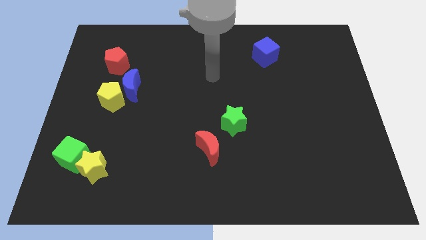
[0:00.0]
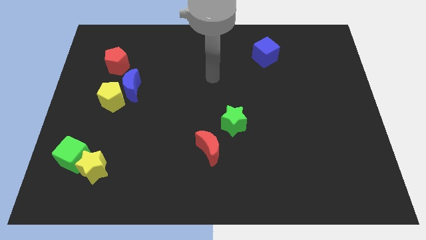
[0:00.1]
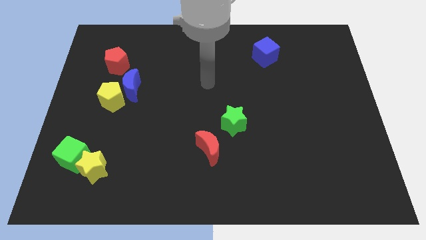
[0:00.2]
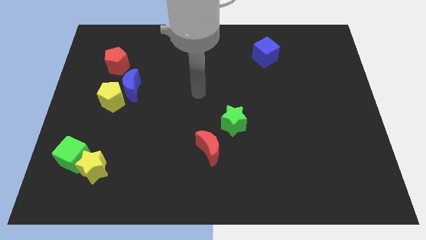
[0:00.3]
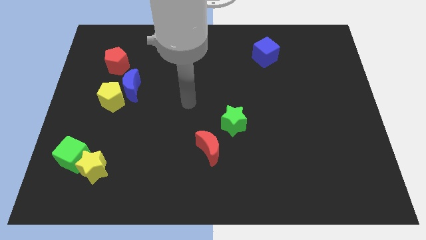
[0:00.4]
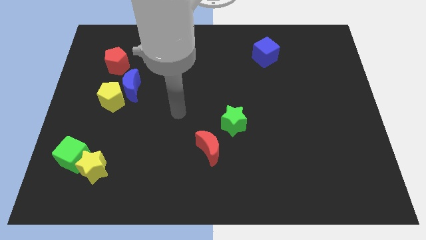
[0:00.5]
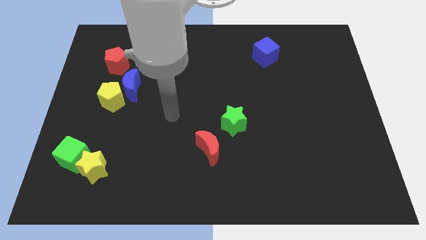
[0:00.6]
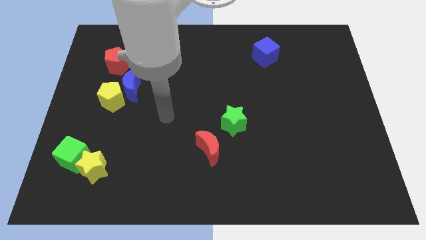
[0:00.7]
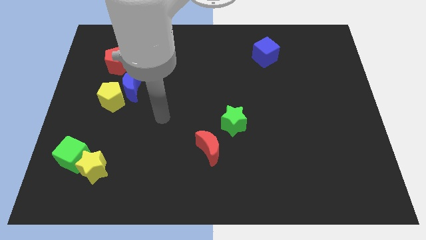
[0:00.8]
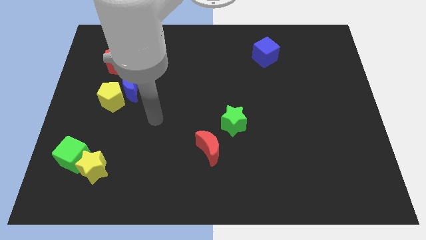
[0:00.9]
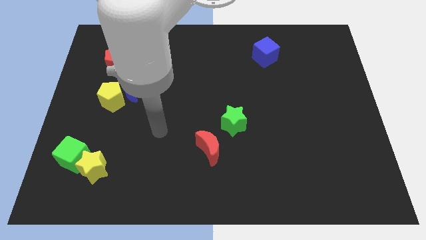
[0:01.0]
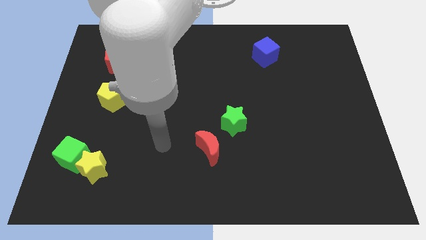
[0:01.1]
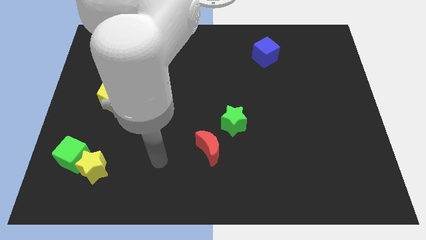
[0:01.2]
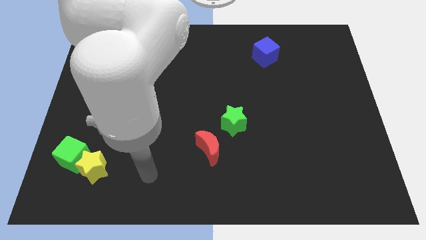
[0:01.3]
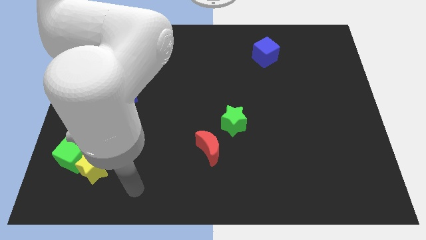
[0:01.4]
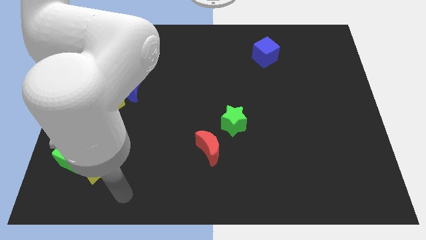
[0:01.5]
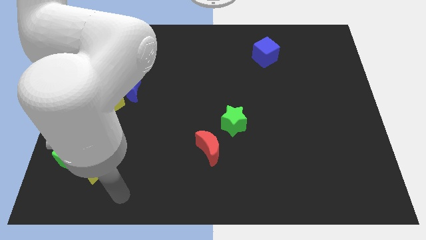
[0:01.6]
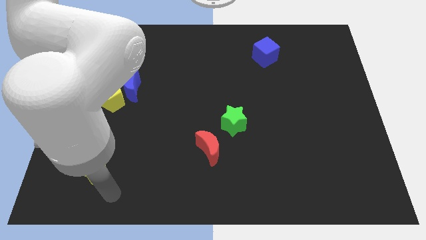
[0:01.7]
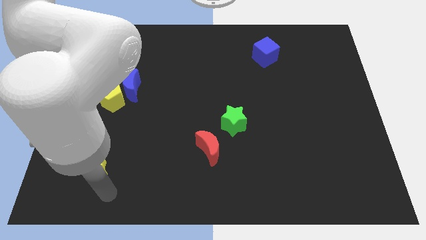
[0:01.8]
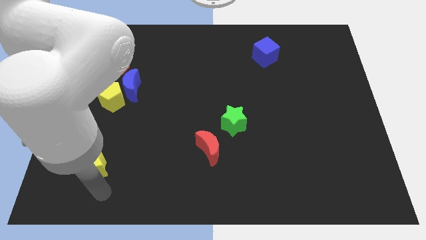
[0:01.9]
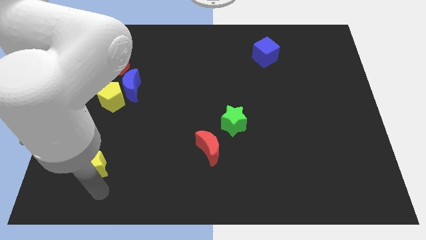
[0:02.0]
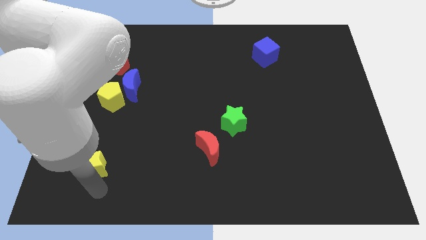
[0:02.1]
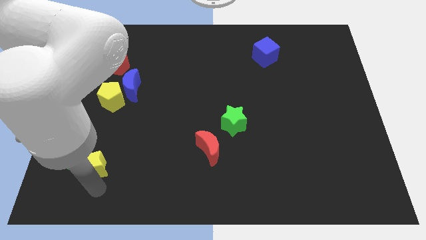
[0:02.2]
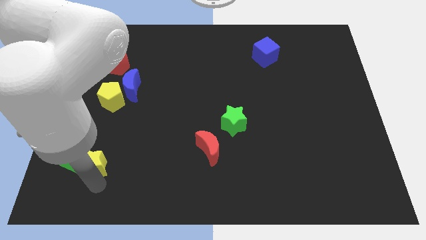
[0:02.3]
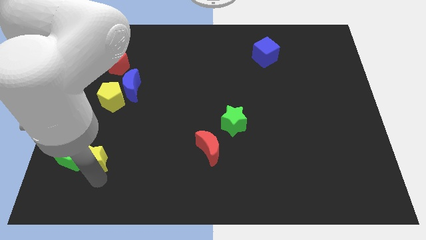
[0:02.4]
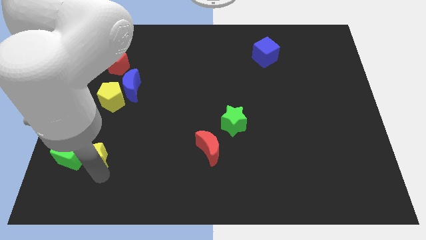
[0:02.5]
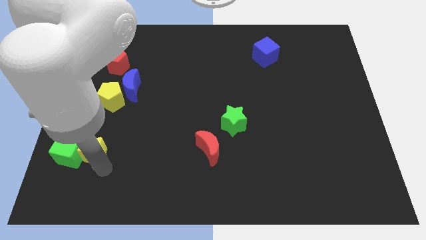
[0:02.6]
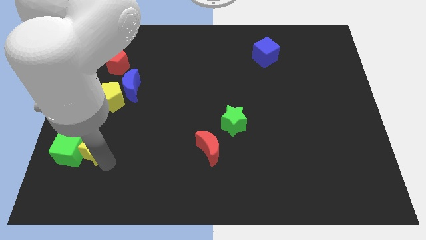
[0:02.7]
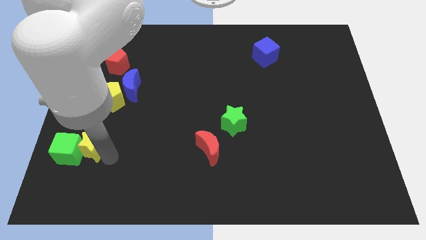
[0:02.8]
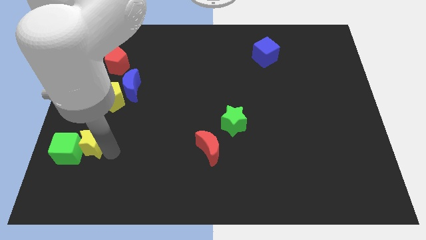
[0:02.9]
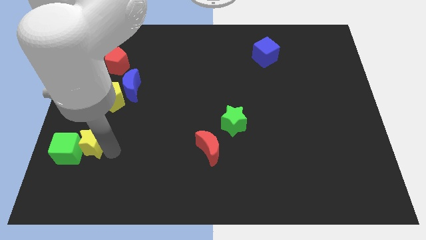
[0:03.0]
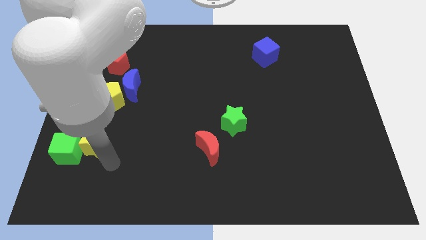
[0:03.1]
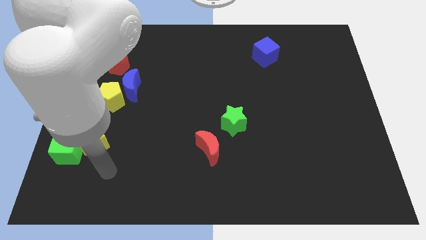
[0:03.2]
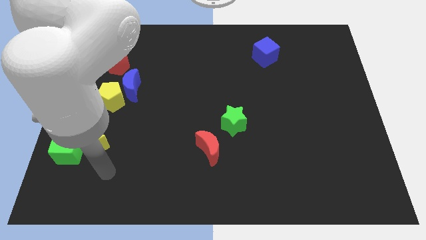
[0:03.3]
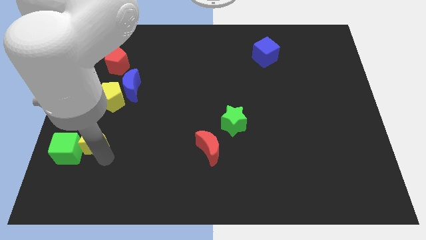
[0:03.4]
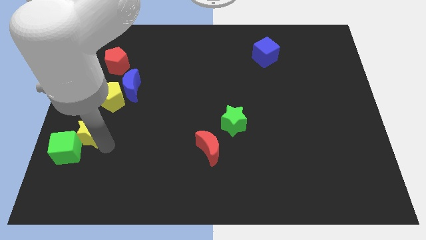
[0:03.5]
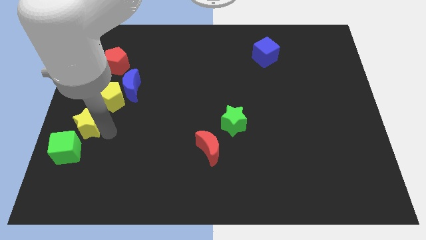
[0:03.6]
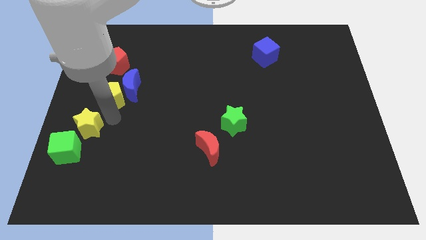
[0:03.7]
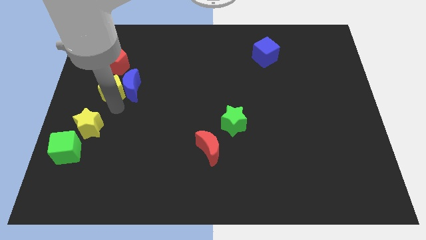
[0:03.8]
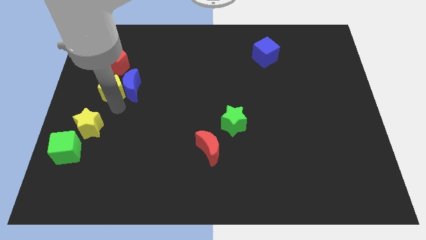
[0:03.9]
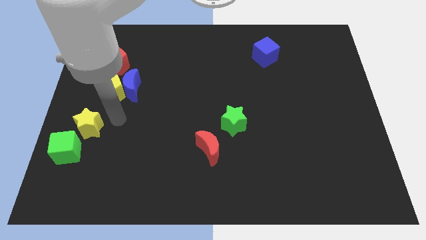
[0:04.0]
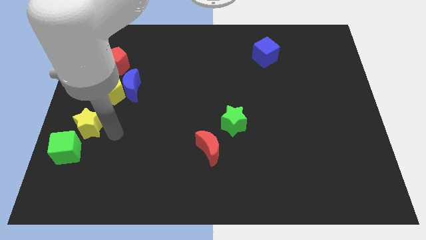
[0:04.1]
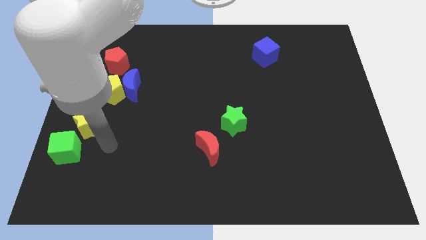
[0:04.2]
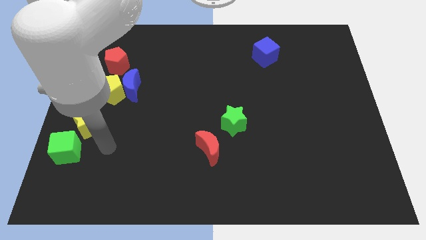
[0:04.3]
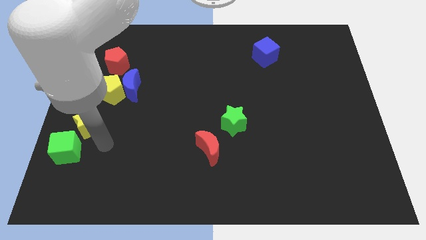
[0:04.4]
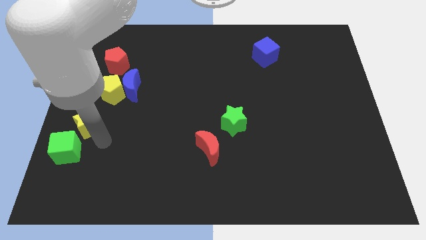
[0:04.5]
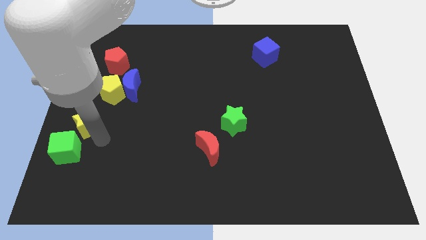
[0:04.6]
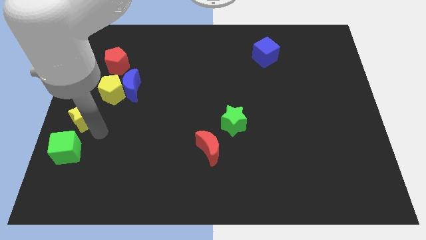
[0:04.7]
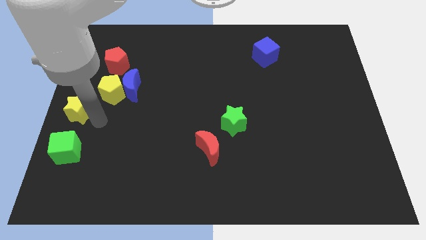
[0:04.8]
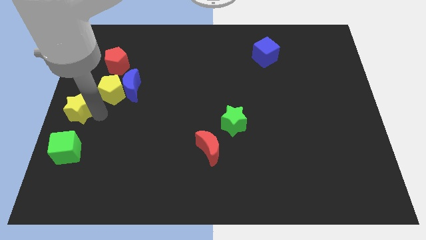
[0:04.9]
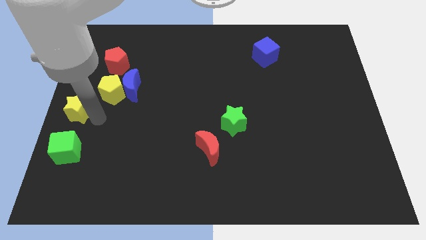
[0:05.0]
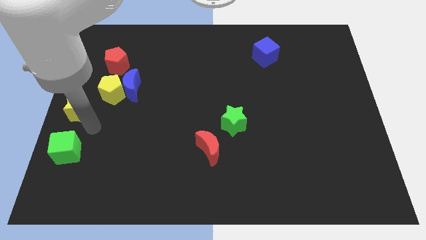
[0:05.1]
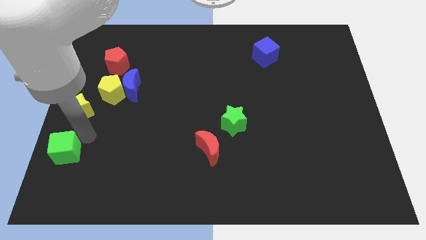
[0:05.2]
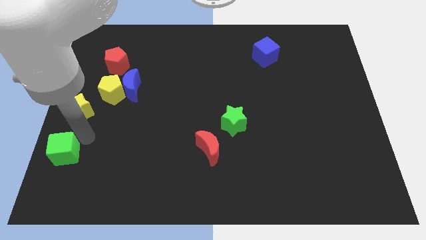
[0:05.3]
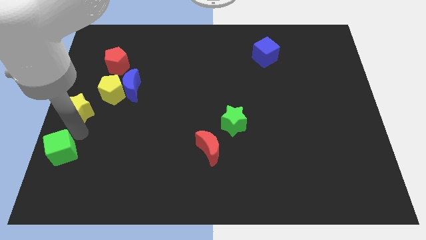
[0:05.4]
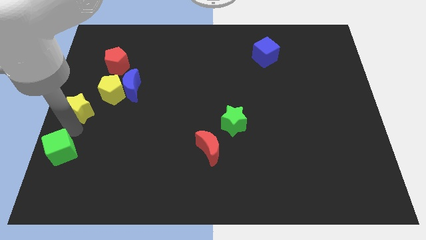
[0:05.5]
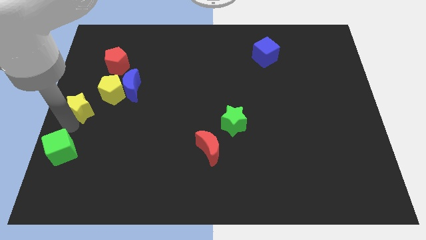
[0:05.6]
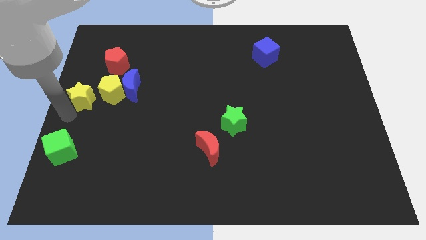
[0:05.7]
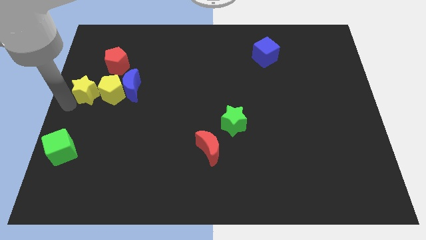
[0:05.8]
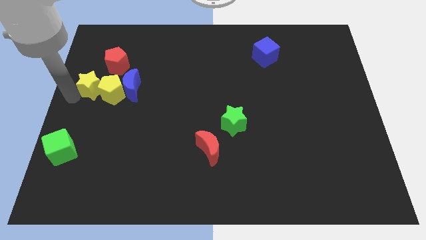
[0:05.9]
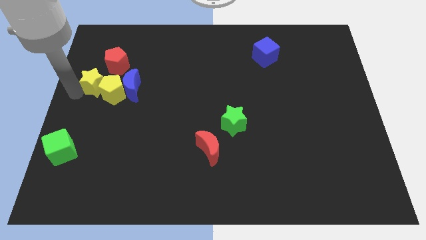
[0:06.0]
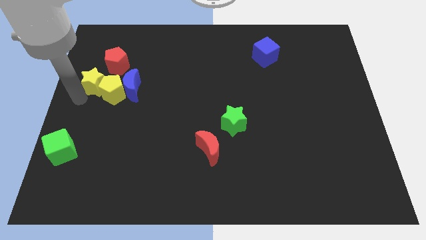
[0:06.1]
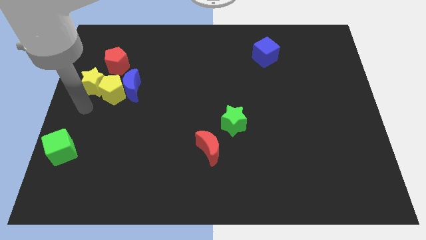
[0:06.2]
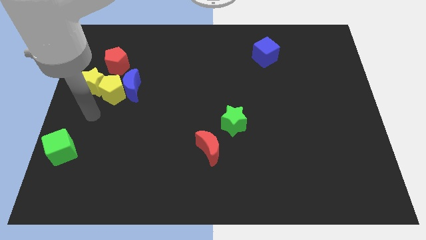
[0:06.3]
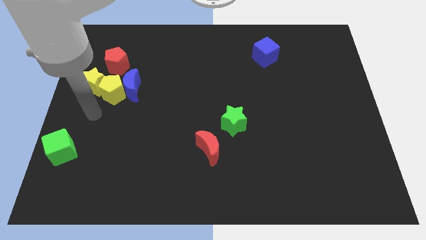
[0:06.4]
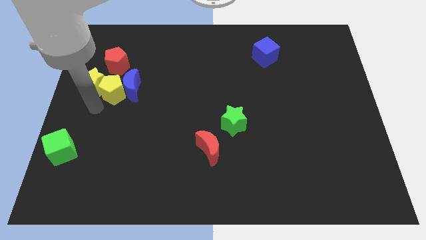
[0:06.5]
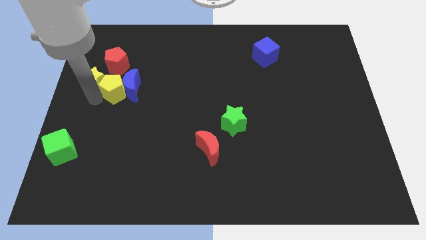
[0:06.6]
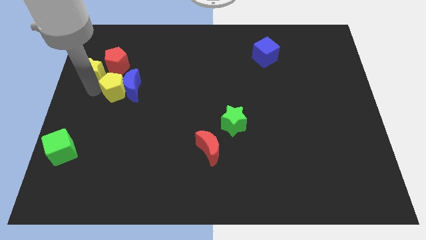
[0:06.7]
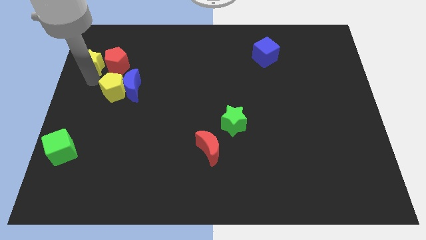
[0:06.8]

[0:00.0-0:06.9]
move the yellow star to left of the red pentagon

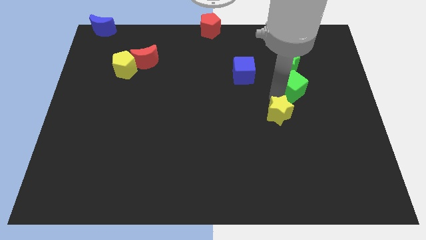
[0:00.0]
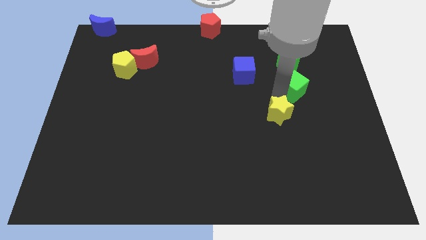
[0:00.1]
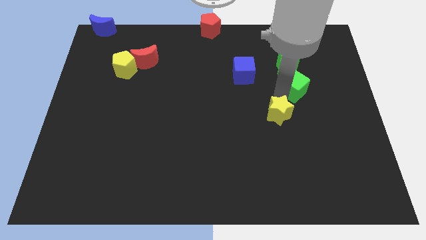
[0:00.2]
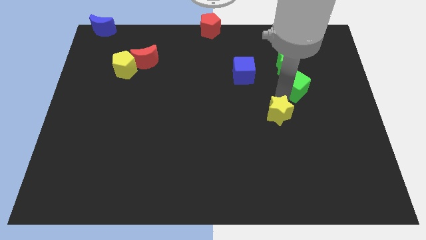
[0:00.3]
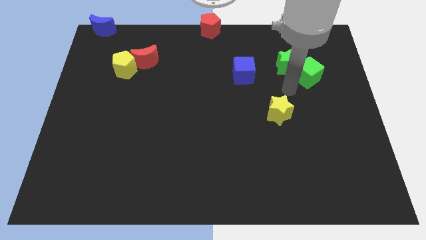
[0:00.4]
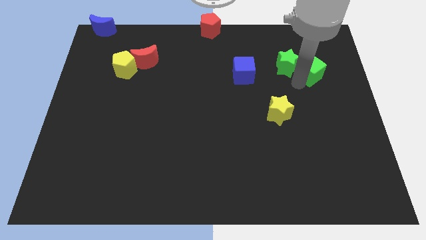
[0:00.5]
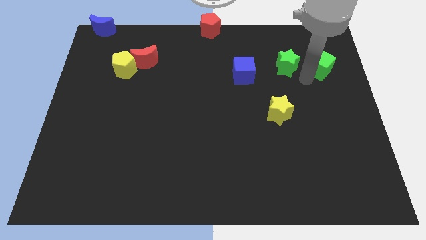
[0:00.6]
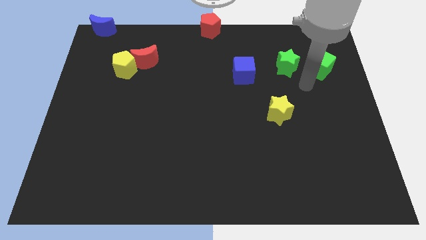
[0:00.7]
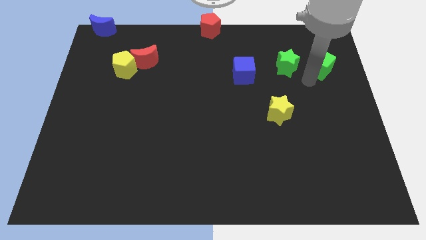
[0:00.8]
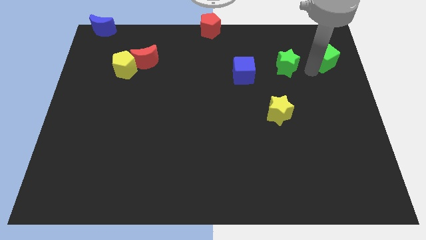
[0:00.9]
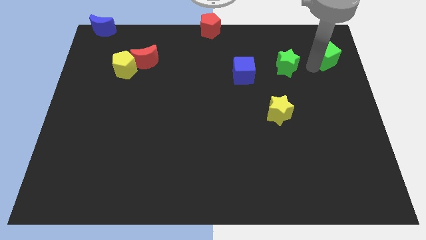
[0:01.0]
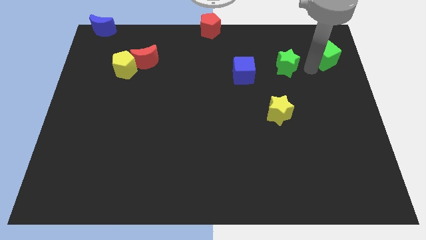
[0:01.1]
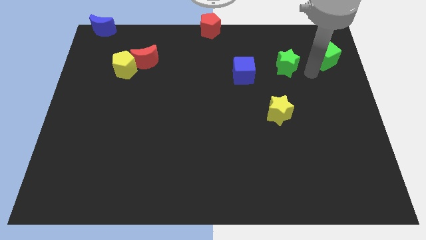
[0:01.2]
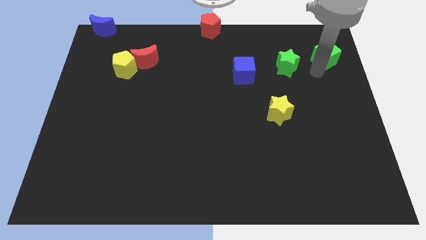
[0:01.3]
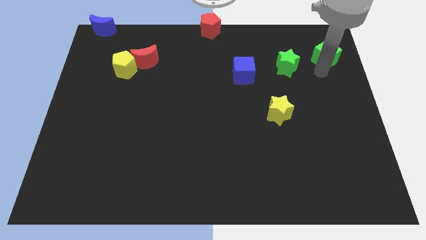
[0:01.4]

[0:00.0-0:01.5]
move the green cube away from the green star

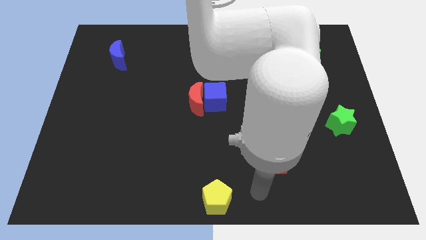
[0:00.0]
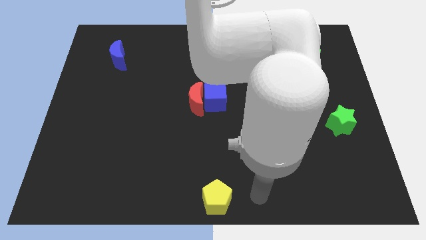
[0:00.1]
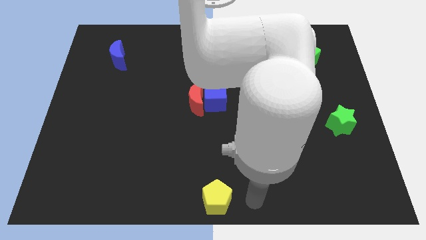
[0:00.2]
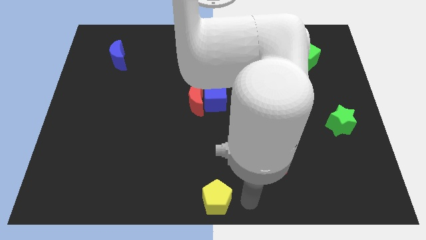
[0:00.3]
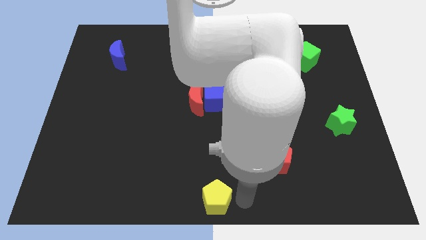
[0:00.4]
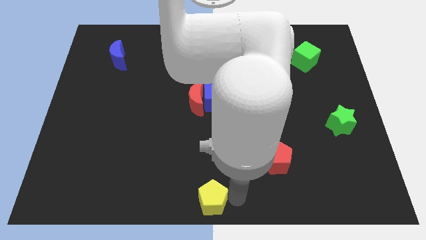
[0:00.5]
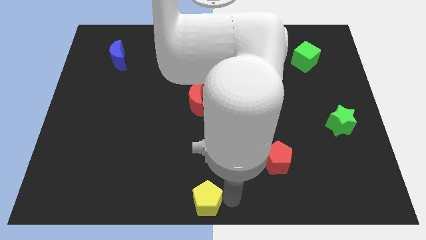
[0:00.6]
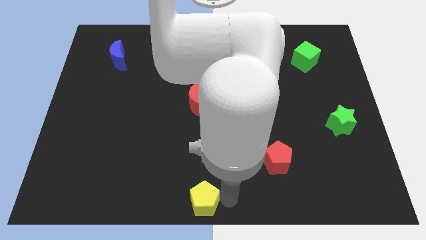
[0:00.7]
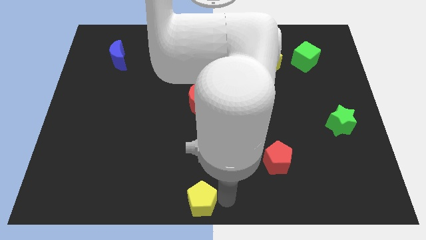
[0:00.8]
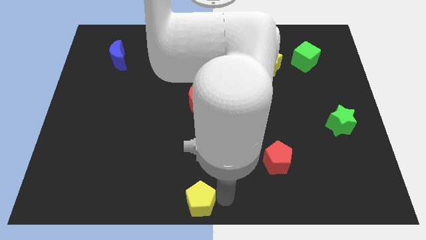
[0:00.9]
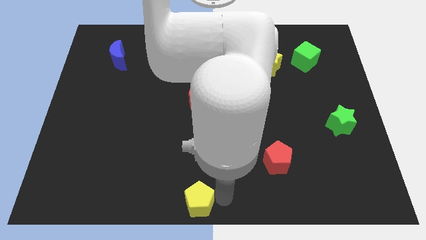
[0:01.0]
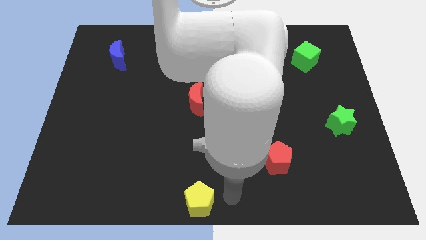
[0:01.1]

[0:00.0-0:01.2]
place the yellow pentagon at the bottom center of the board
